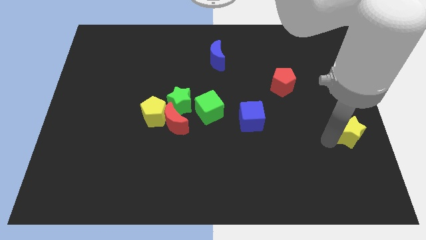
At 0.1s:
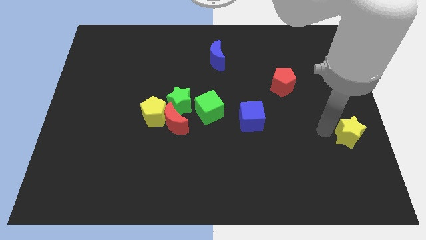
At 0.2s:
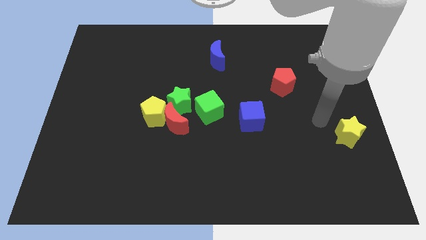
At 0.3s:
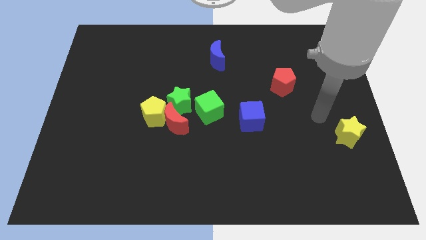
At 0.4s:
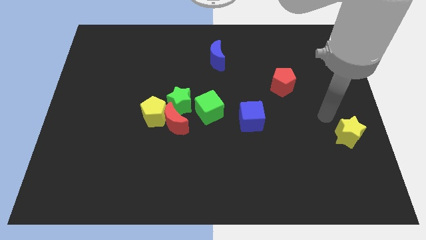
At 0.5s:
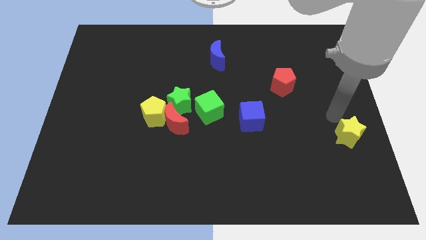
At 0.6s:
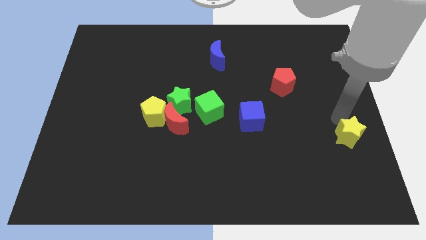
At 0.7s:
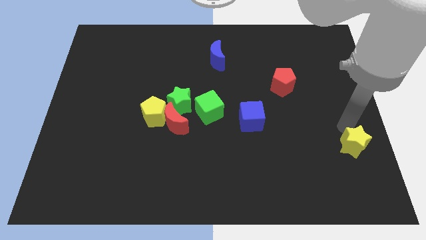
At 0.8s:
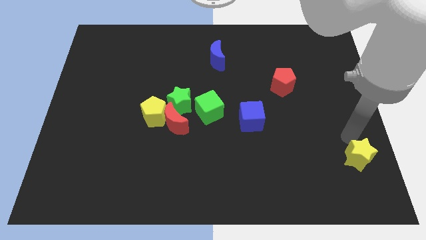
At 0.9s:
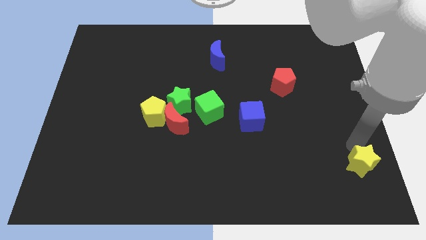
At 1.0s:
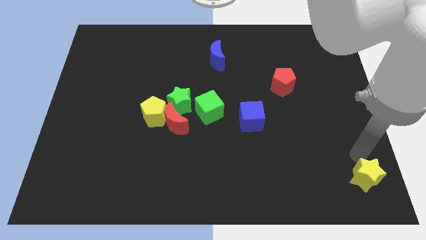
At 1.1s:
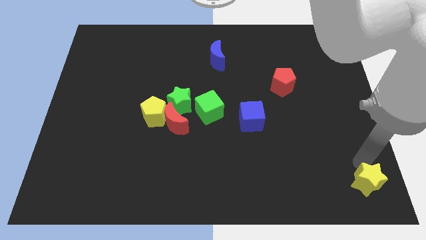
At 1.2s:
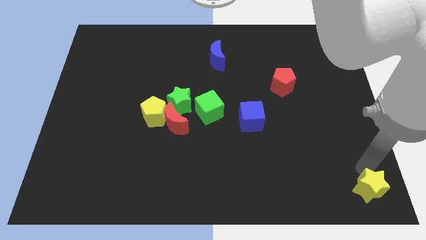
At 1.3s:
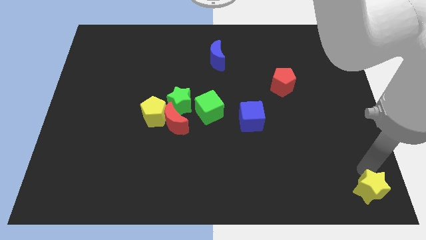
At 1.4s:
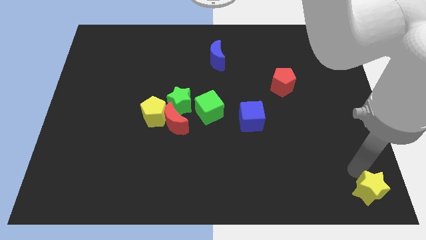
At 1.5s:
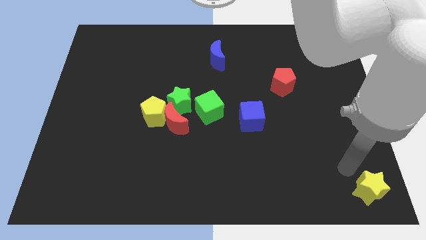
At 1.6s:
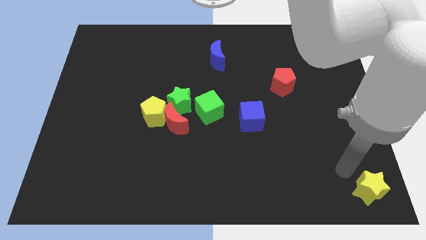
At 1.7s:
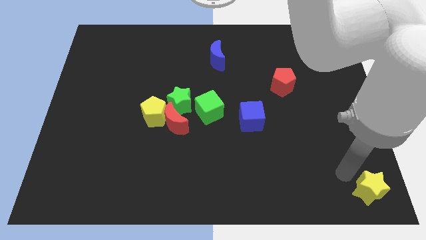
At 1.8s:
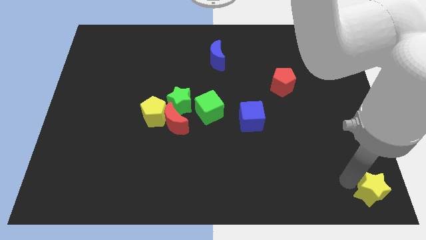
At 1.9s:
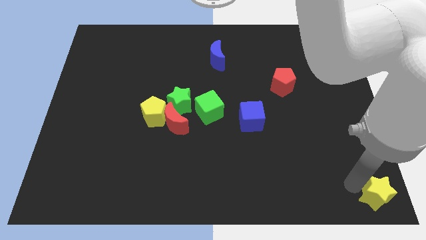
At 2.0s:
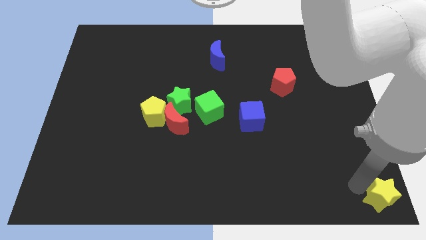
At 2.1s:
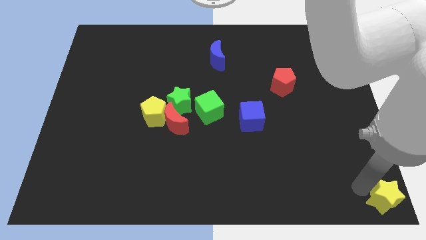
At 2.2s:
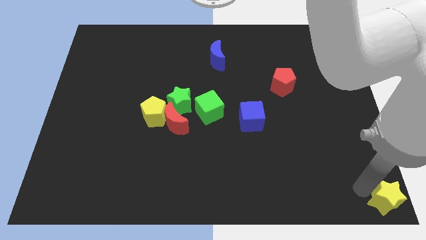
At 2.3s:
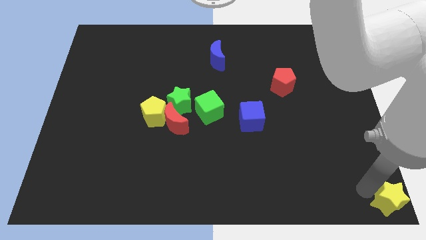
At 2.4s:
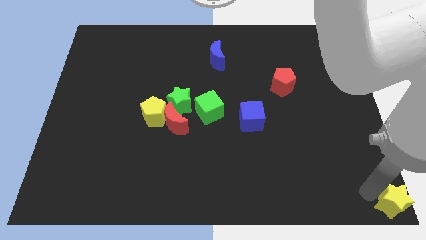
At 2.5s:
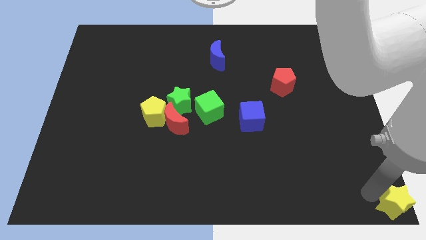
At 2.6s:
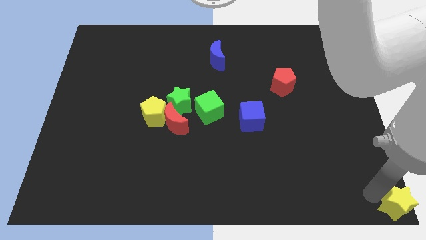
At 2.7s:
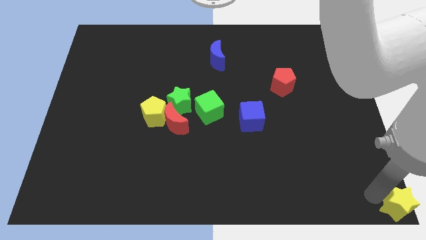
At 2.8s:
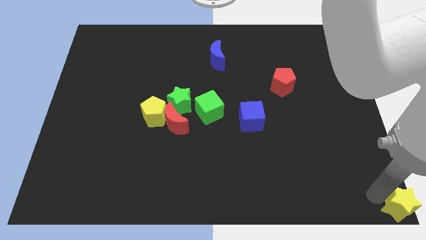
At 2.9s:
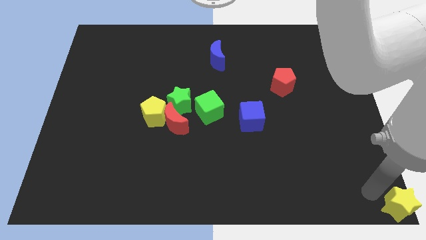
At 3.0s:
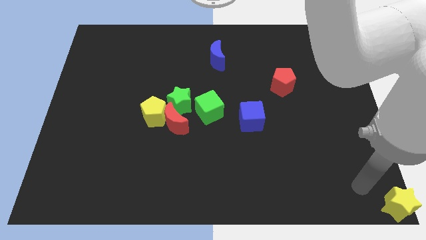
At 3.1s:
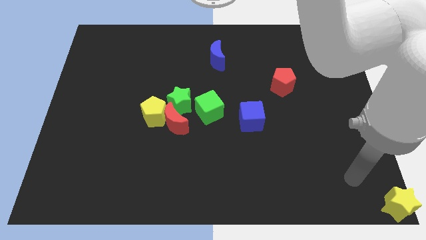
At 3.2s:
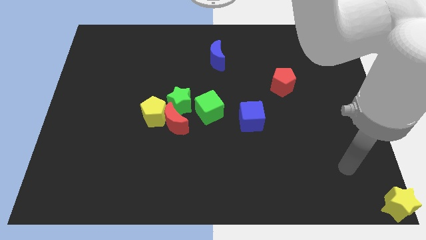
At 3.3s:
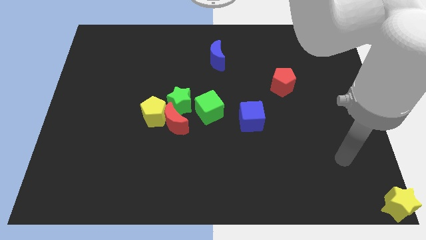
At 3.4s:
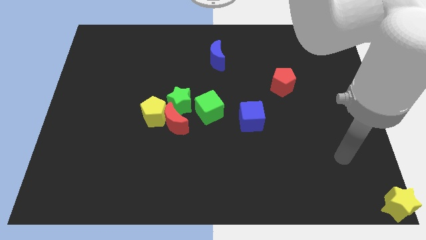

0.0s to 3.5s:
push the yellow star towards the bottom right of the board

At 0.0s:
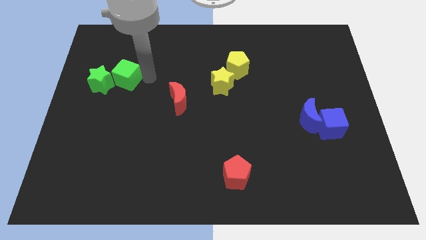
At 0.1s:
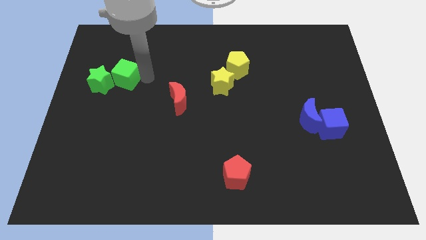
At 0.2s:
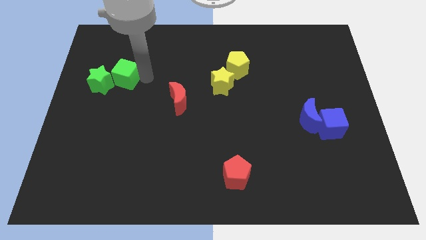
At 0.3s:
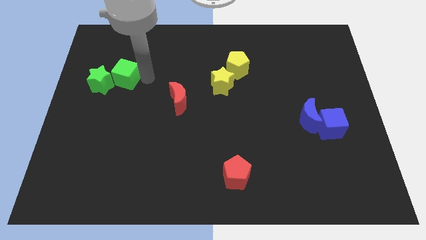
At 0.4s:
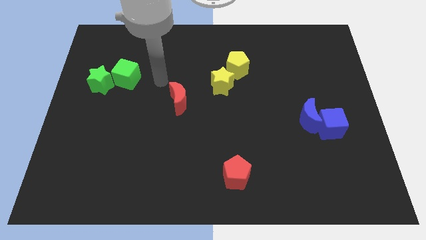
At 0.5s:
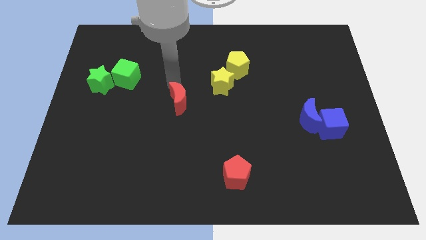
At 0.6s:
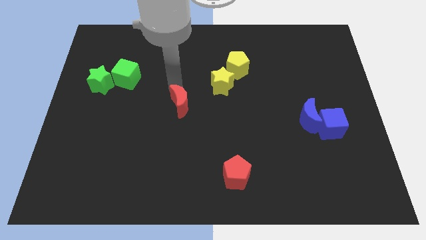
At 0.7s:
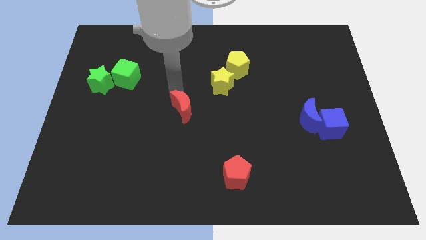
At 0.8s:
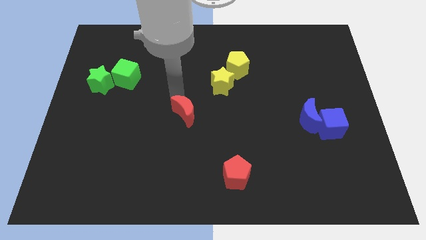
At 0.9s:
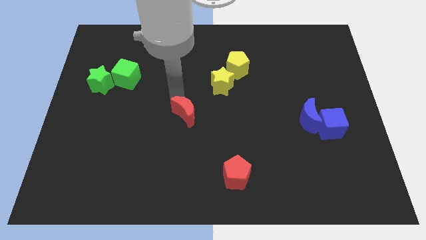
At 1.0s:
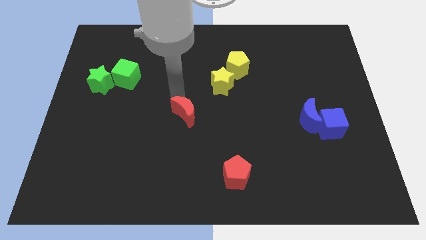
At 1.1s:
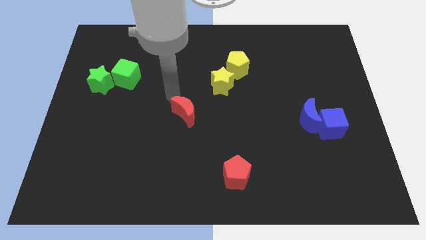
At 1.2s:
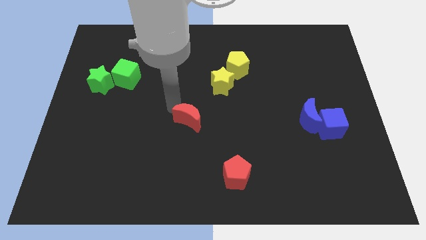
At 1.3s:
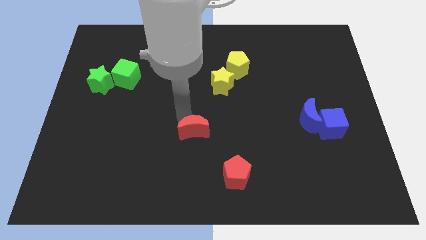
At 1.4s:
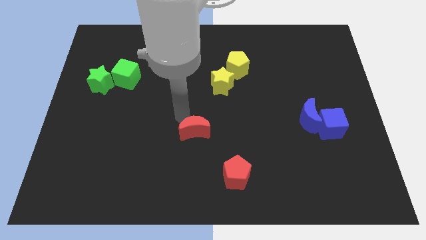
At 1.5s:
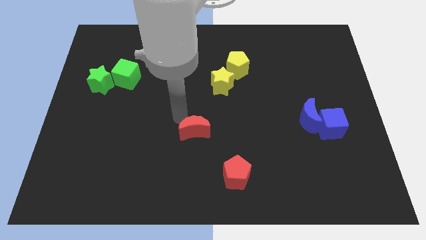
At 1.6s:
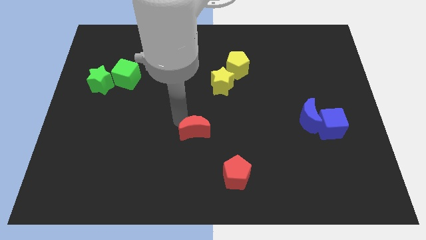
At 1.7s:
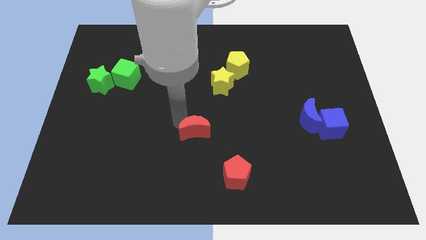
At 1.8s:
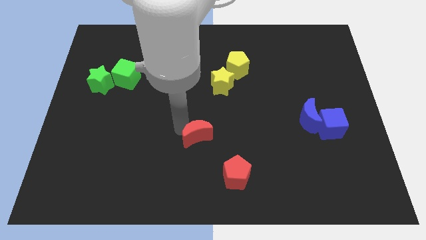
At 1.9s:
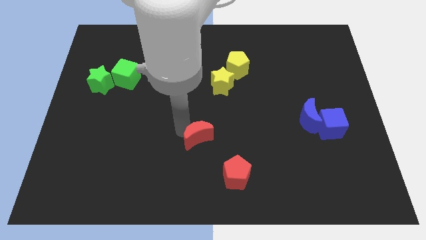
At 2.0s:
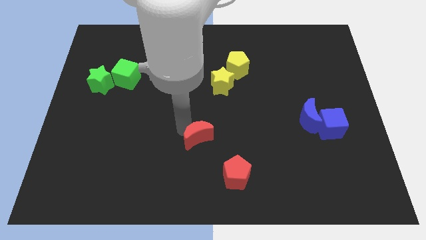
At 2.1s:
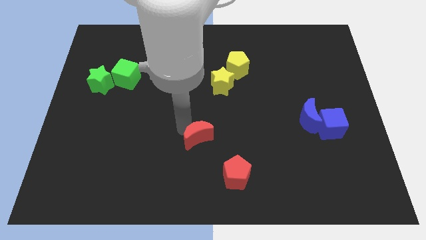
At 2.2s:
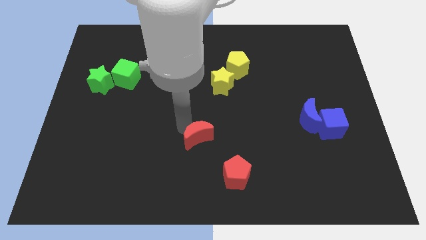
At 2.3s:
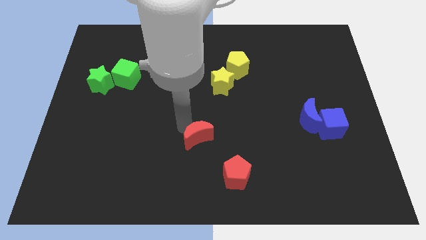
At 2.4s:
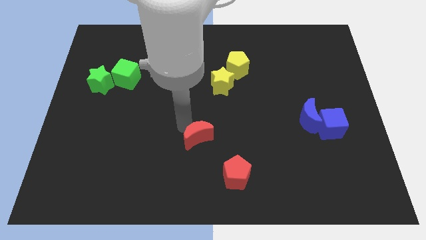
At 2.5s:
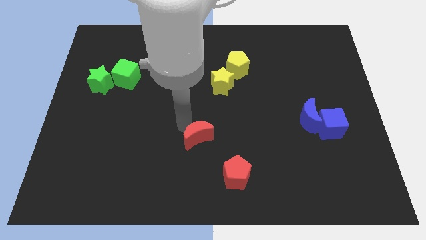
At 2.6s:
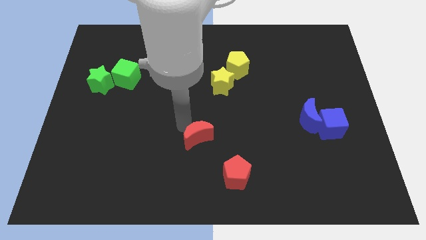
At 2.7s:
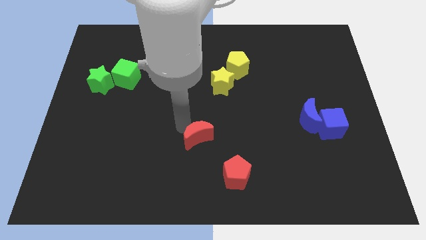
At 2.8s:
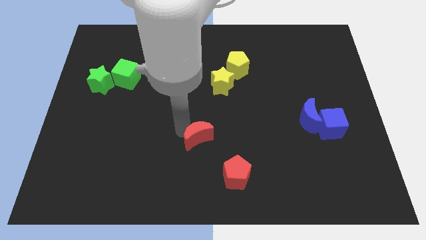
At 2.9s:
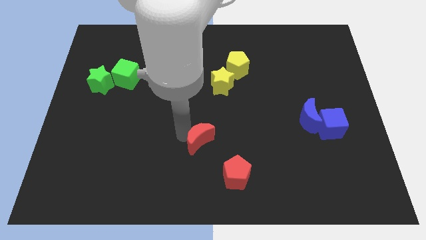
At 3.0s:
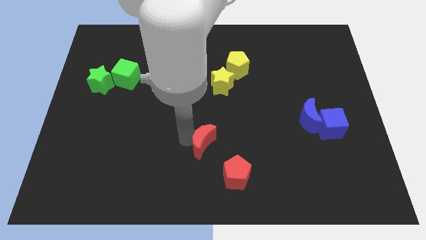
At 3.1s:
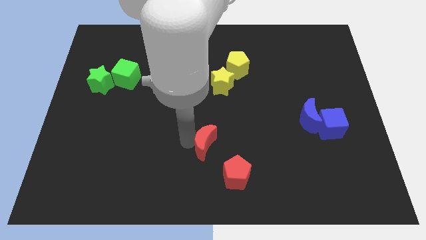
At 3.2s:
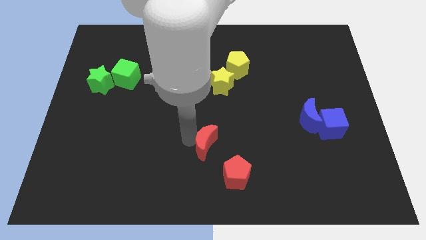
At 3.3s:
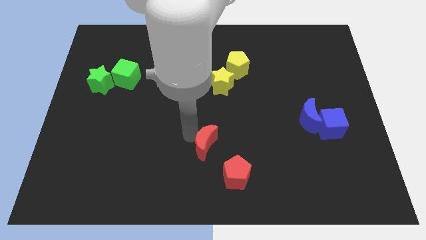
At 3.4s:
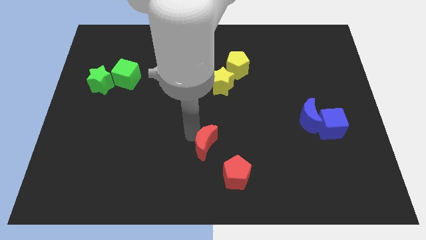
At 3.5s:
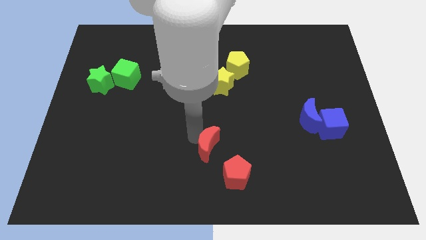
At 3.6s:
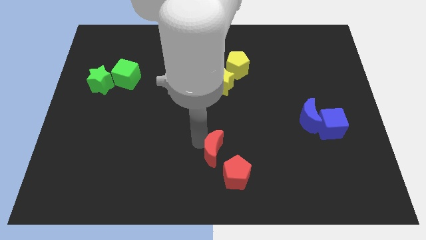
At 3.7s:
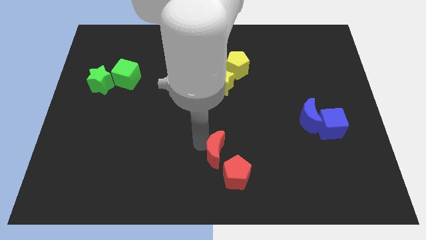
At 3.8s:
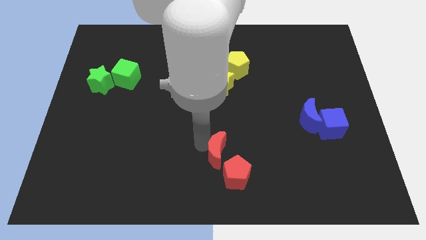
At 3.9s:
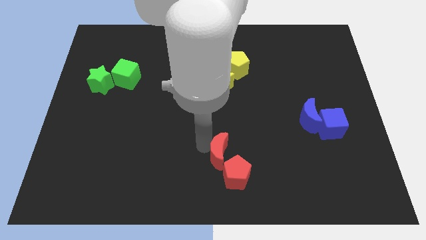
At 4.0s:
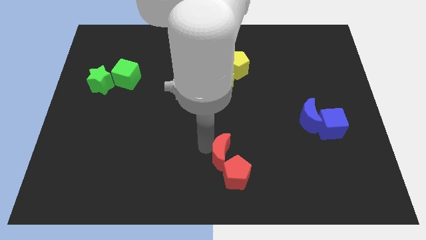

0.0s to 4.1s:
place the red crescent in between red pentagon and yellow star

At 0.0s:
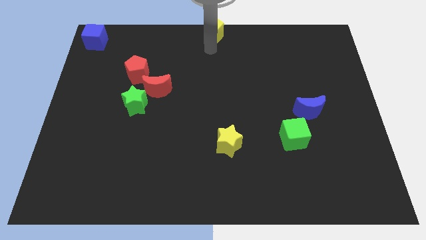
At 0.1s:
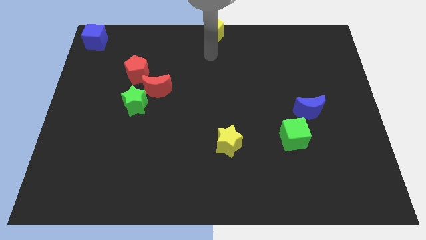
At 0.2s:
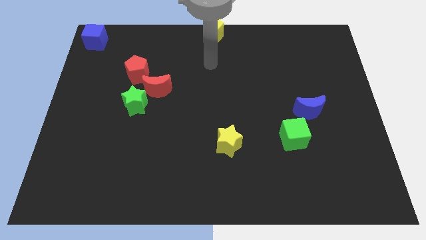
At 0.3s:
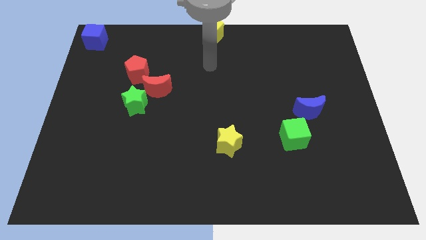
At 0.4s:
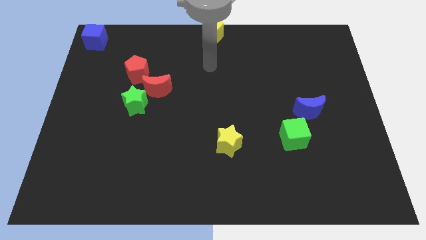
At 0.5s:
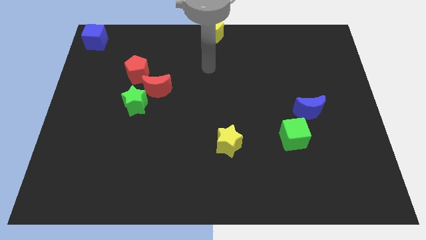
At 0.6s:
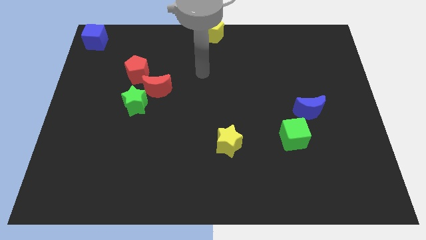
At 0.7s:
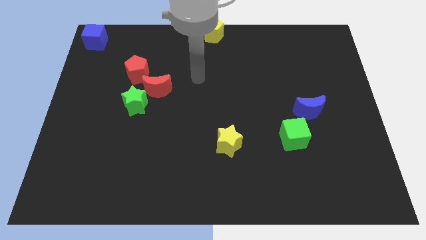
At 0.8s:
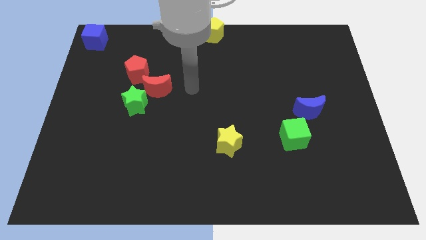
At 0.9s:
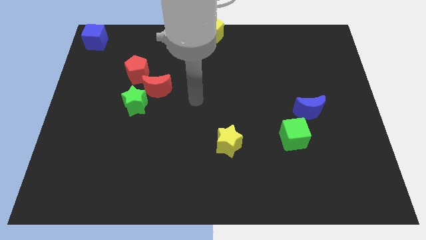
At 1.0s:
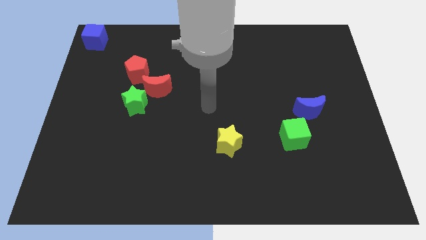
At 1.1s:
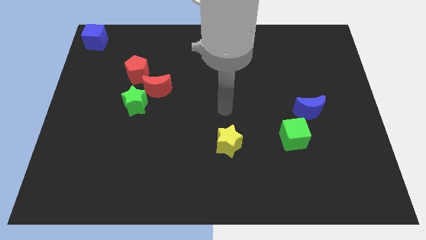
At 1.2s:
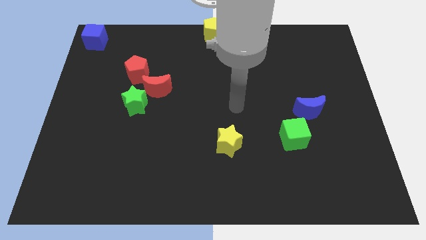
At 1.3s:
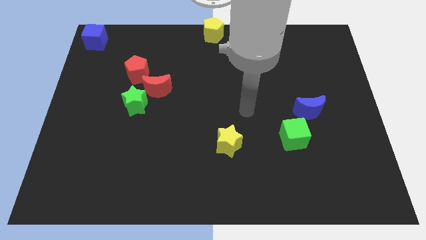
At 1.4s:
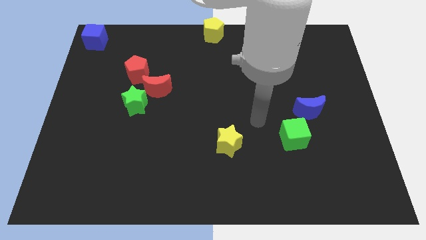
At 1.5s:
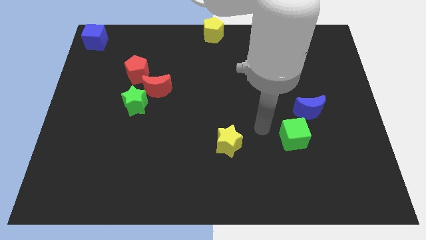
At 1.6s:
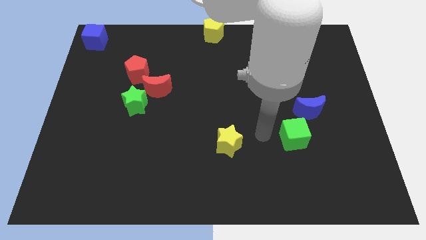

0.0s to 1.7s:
move your arm away from yellow pentagon
